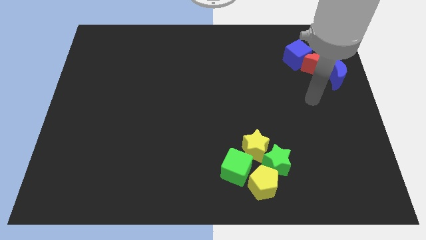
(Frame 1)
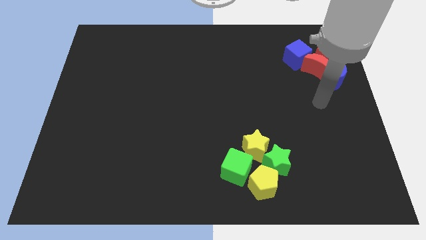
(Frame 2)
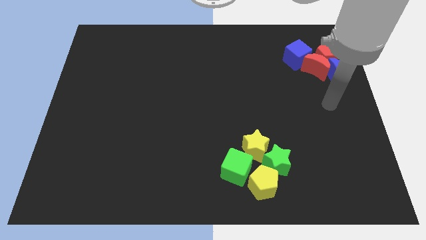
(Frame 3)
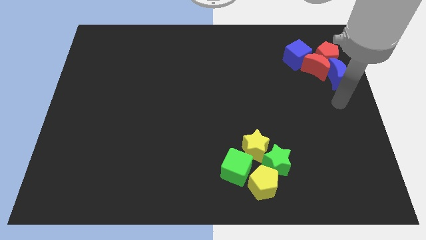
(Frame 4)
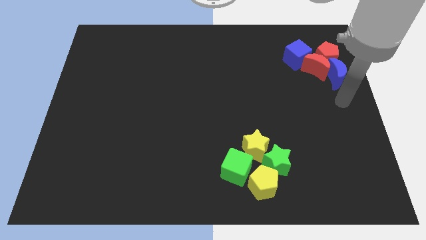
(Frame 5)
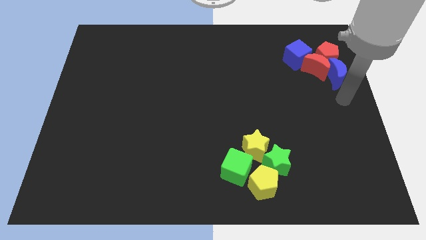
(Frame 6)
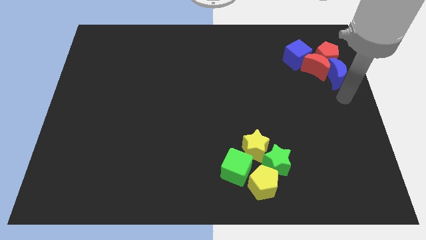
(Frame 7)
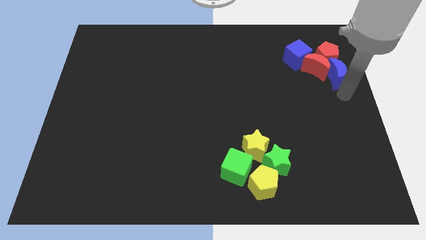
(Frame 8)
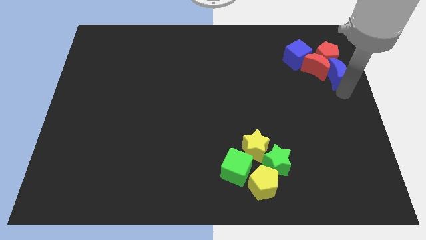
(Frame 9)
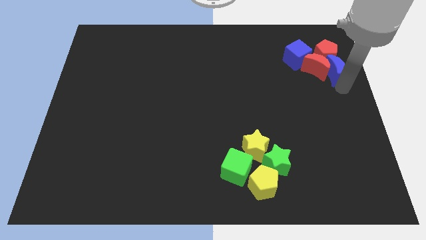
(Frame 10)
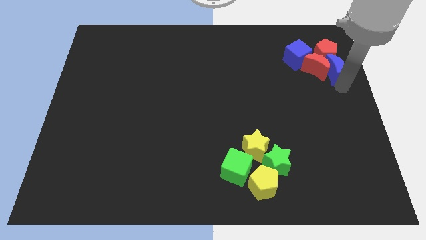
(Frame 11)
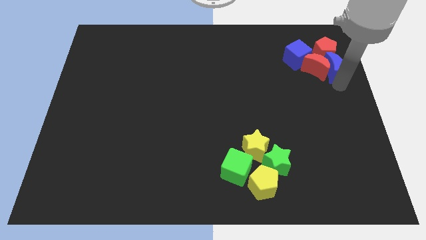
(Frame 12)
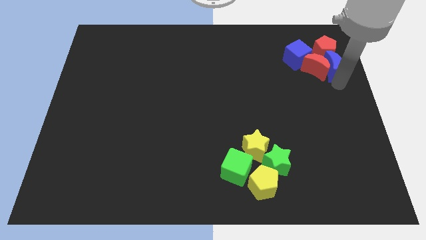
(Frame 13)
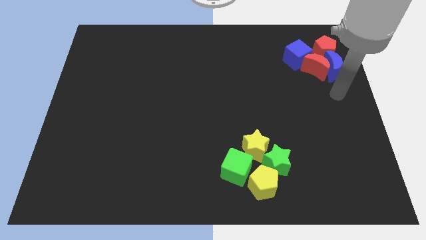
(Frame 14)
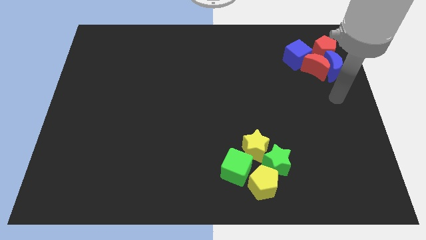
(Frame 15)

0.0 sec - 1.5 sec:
push the blue moon slightly to the top

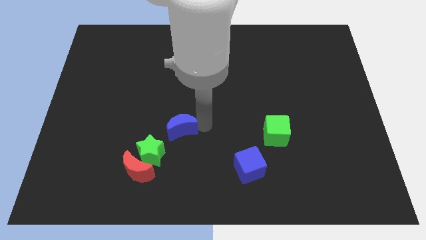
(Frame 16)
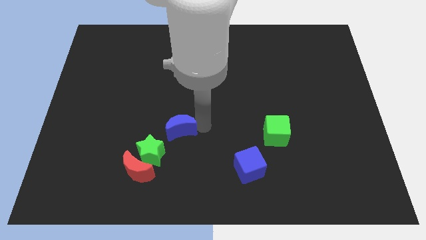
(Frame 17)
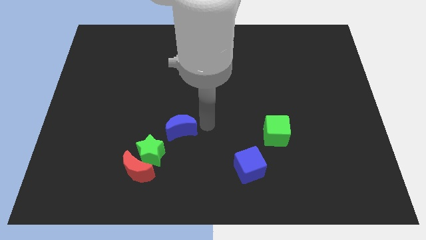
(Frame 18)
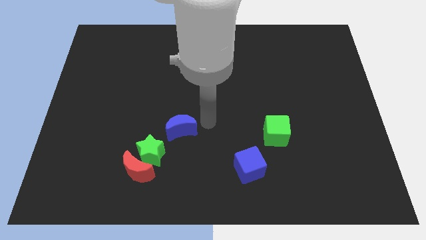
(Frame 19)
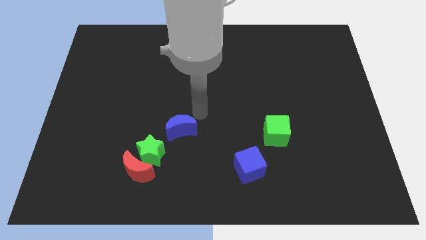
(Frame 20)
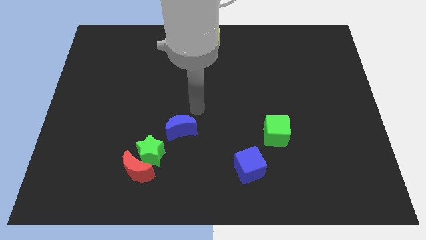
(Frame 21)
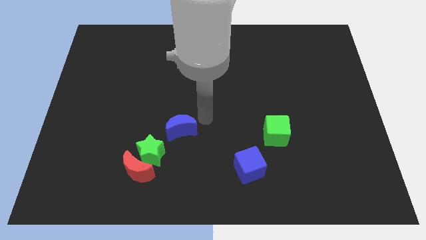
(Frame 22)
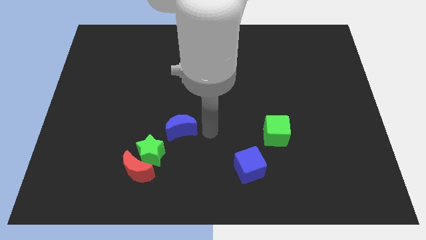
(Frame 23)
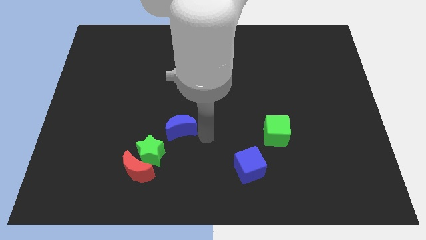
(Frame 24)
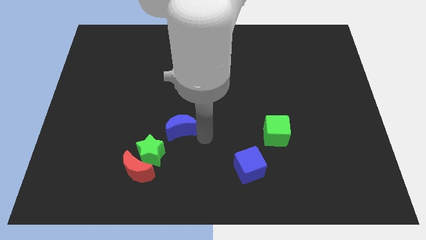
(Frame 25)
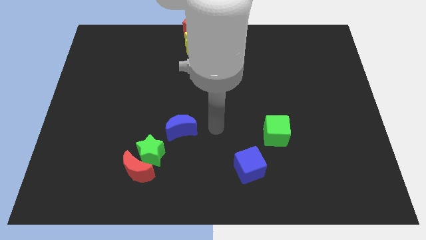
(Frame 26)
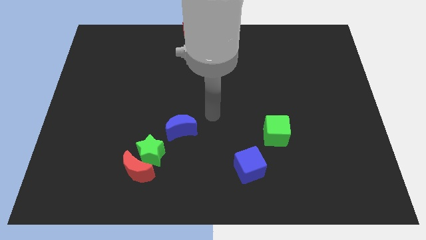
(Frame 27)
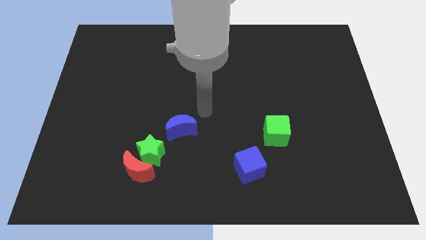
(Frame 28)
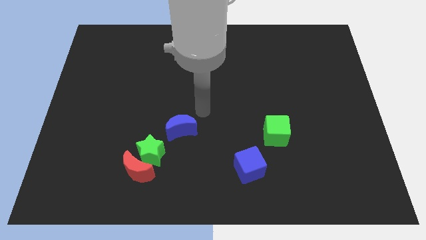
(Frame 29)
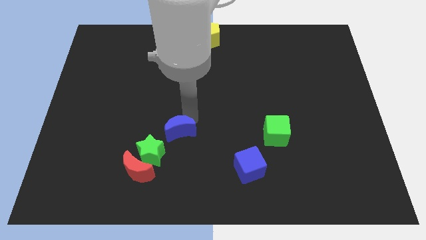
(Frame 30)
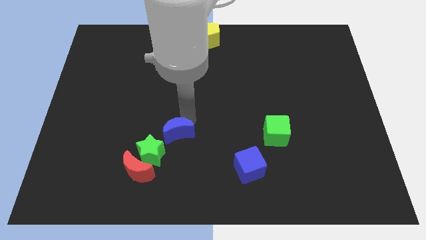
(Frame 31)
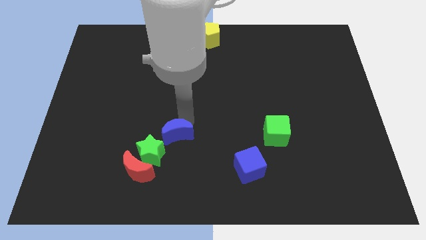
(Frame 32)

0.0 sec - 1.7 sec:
push blue moon close to the green star

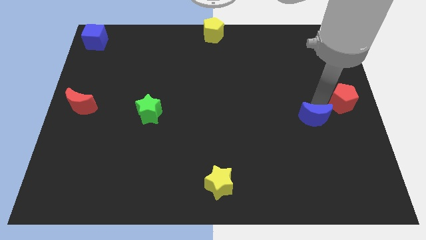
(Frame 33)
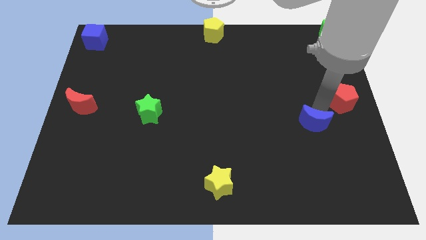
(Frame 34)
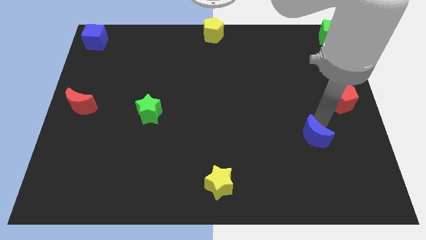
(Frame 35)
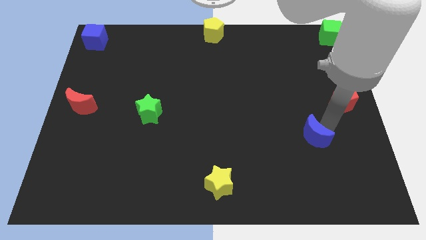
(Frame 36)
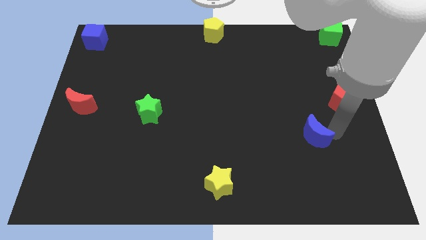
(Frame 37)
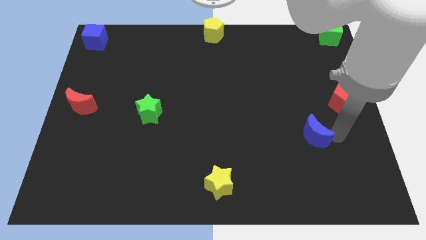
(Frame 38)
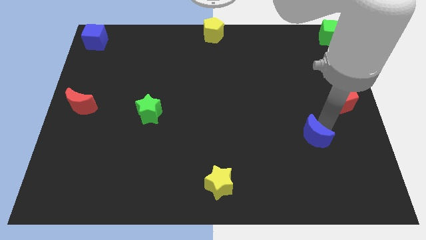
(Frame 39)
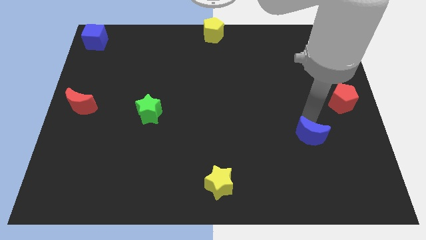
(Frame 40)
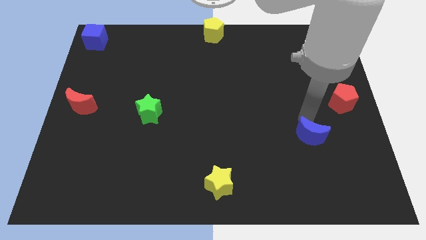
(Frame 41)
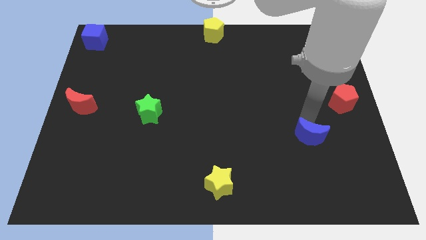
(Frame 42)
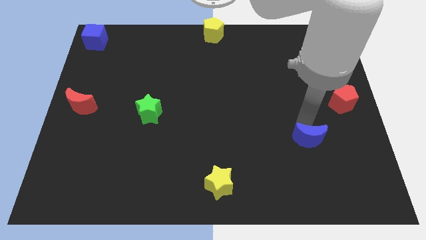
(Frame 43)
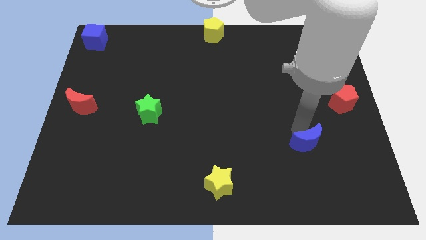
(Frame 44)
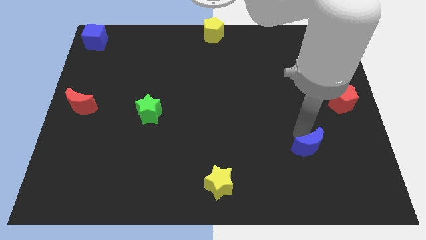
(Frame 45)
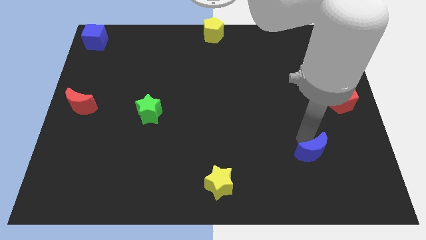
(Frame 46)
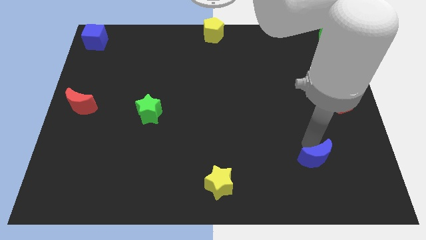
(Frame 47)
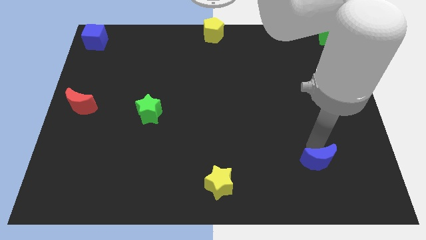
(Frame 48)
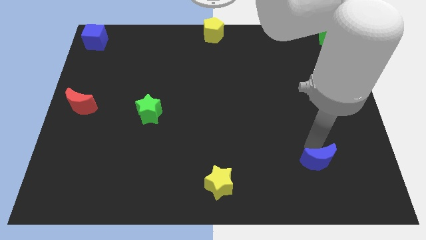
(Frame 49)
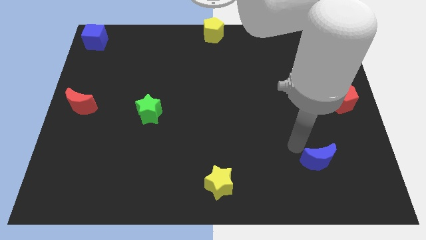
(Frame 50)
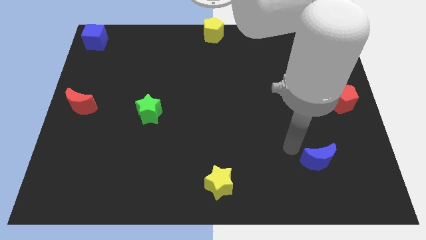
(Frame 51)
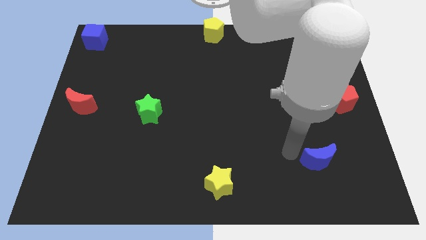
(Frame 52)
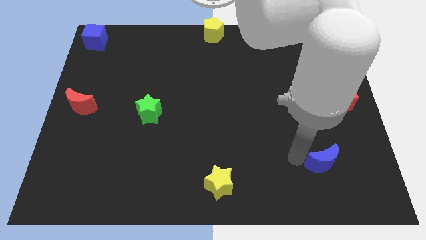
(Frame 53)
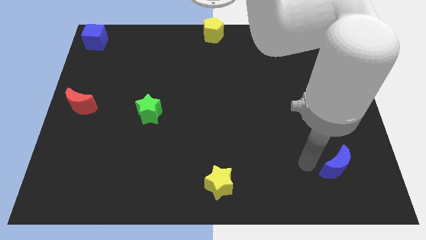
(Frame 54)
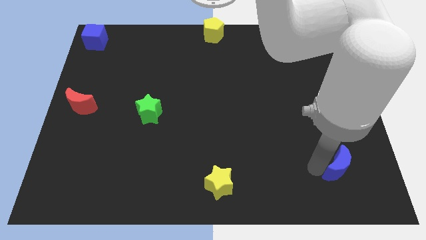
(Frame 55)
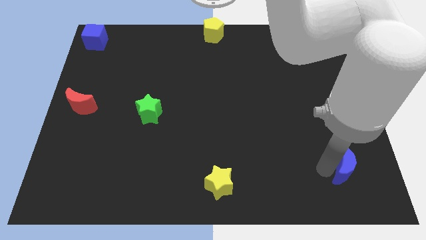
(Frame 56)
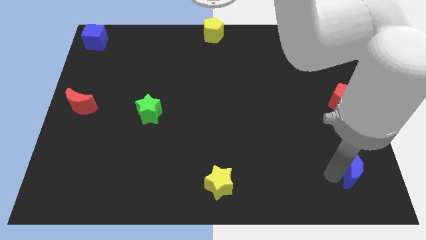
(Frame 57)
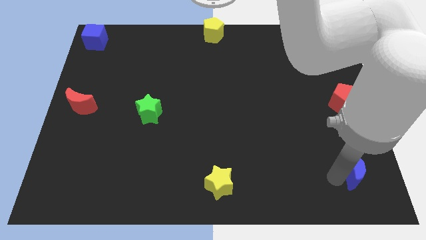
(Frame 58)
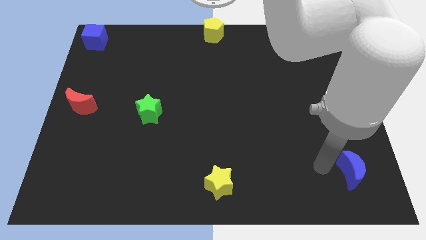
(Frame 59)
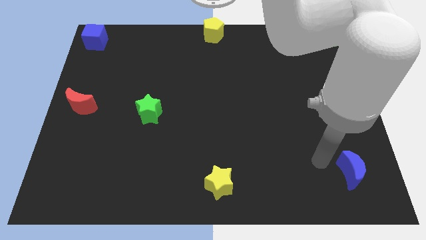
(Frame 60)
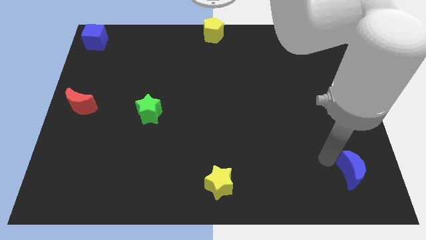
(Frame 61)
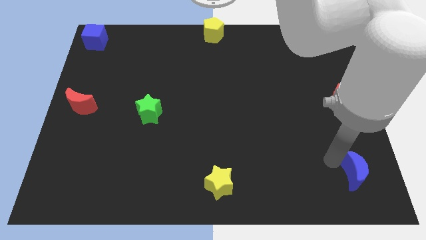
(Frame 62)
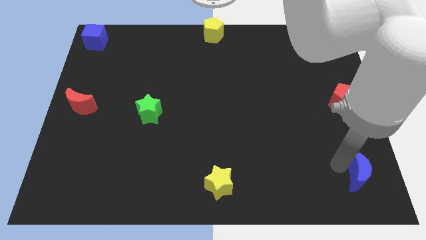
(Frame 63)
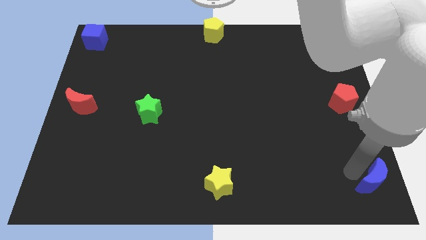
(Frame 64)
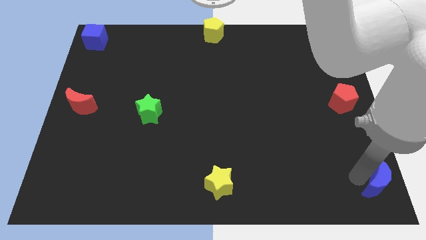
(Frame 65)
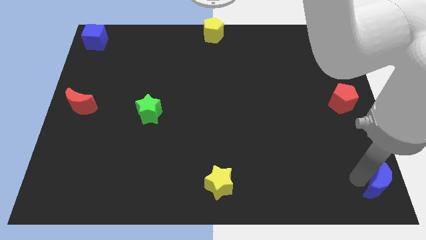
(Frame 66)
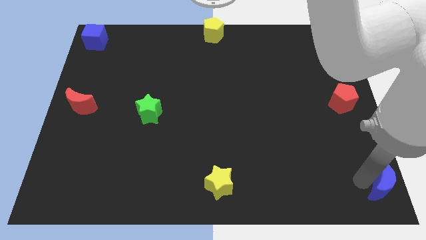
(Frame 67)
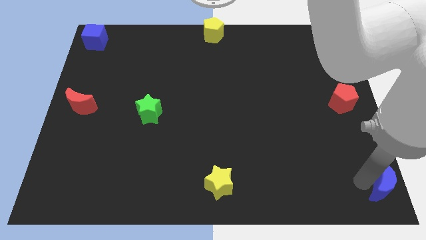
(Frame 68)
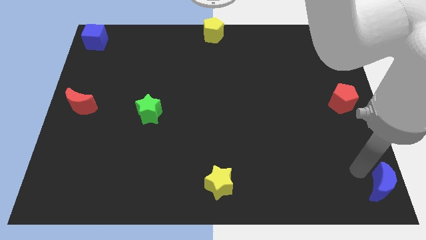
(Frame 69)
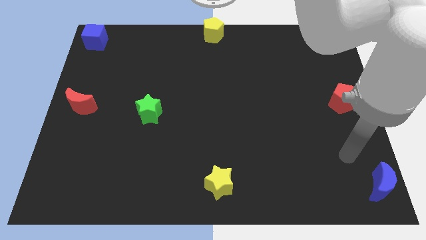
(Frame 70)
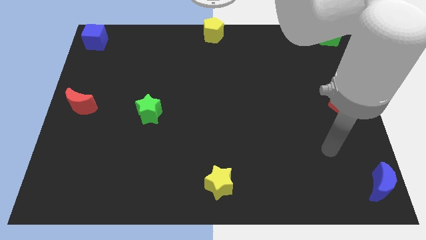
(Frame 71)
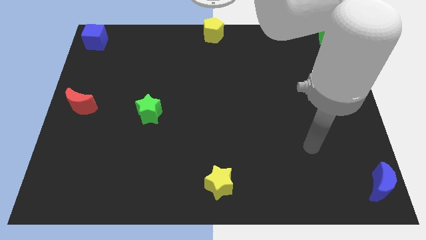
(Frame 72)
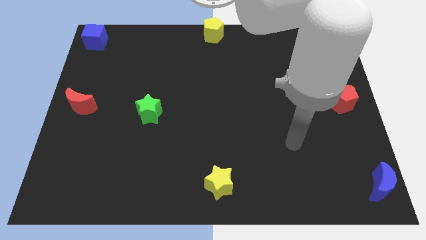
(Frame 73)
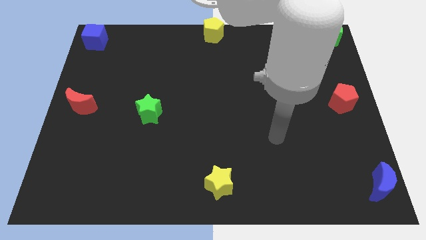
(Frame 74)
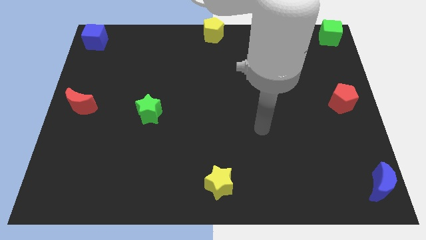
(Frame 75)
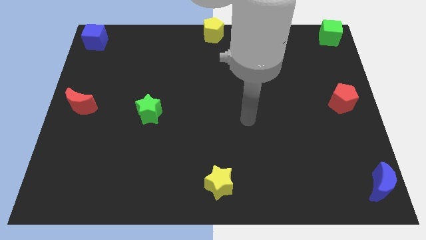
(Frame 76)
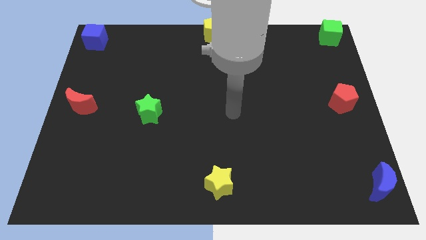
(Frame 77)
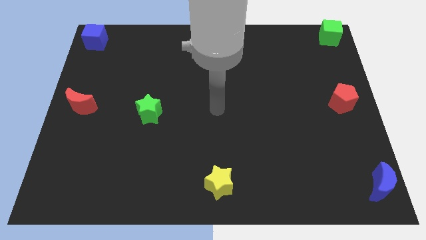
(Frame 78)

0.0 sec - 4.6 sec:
push the blue crescent to the bottom right corner of the board

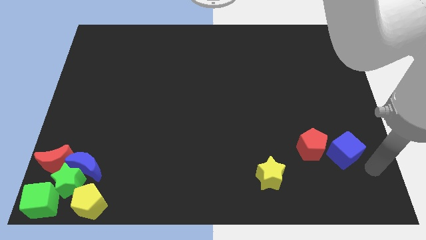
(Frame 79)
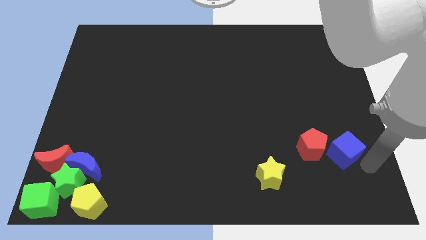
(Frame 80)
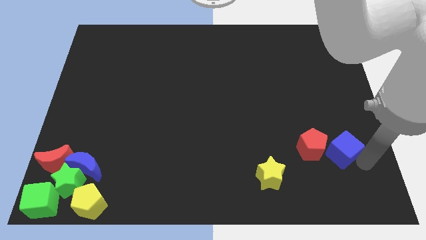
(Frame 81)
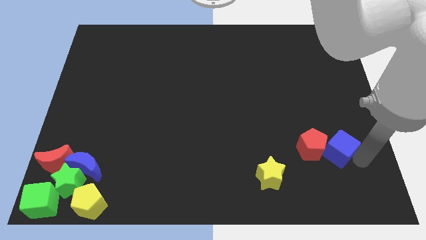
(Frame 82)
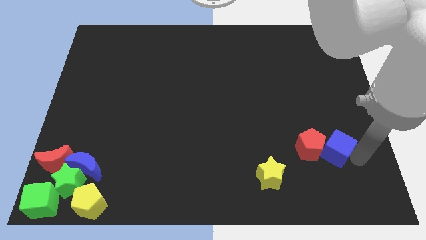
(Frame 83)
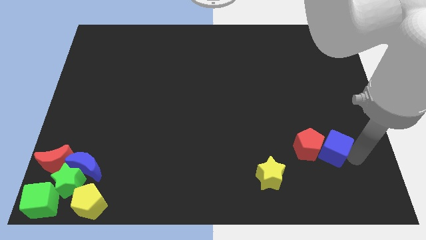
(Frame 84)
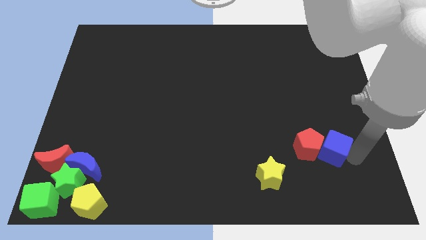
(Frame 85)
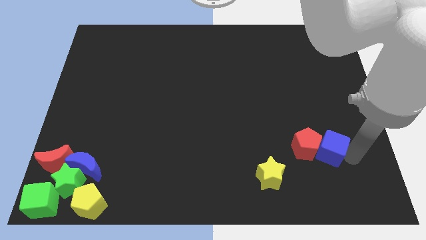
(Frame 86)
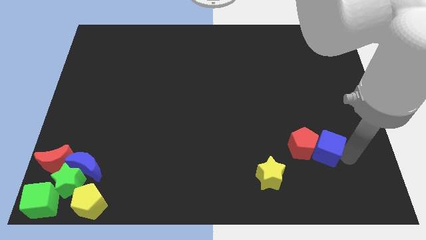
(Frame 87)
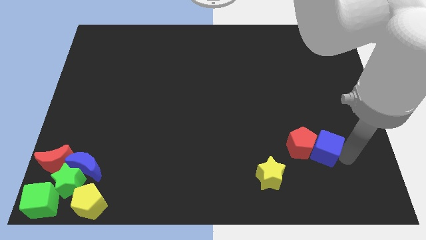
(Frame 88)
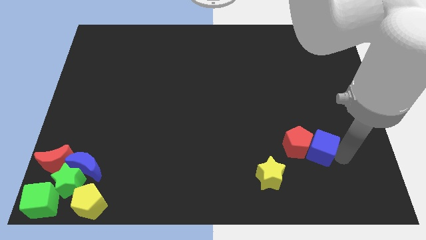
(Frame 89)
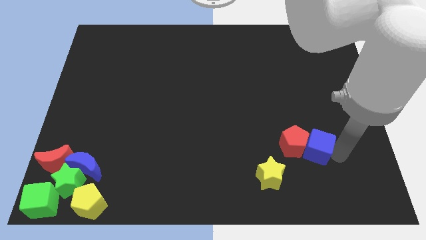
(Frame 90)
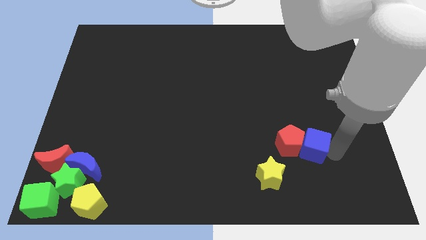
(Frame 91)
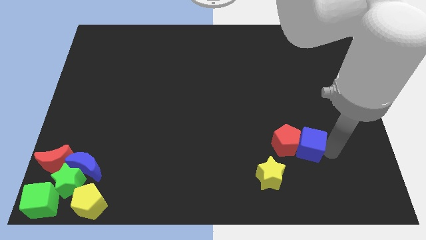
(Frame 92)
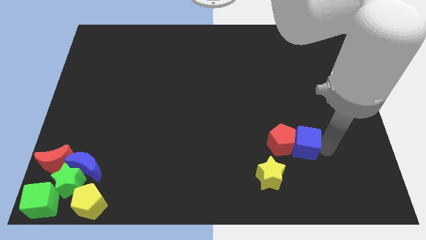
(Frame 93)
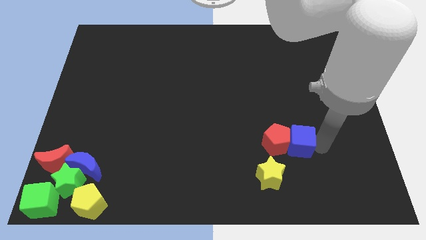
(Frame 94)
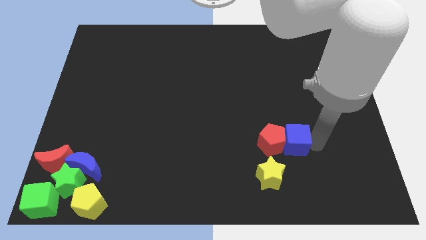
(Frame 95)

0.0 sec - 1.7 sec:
move the blue cube along with the red pentagon to the top of the yellow star
